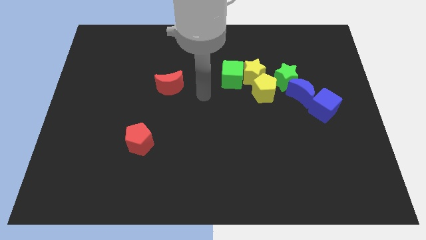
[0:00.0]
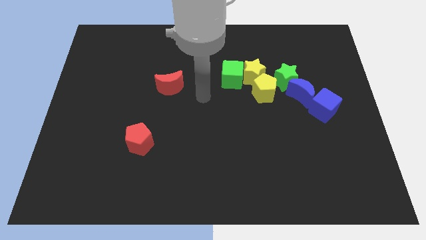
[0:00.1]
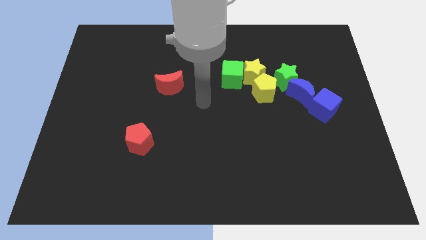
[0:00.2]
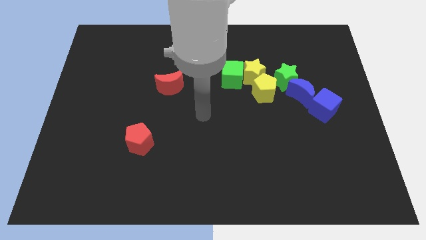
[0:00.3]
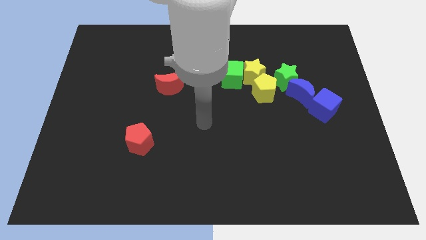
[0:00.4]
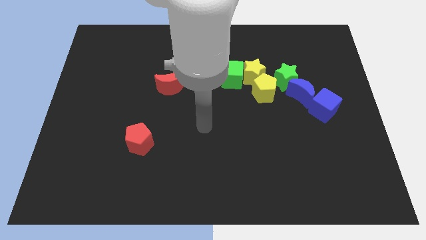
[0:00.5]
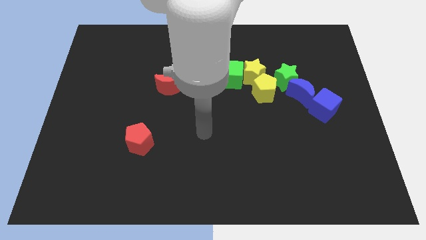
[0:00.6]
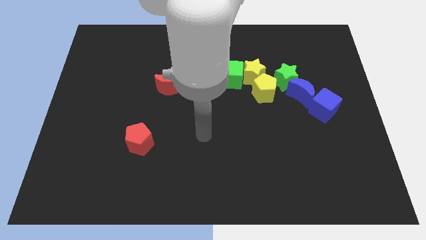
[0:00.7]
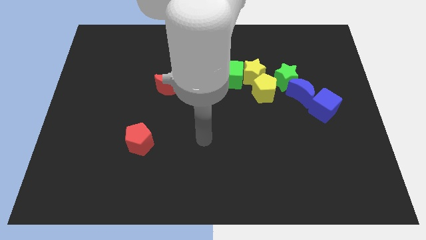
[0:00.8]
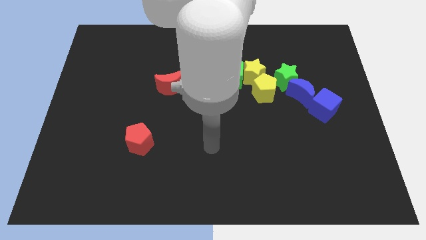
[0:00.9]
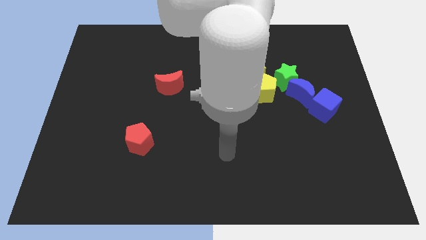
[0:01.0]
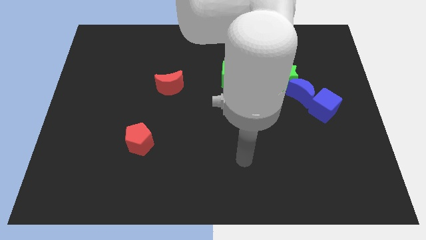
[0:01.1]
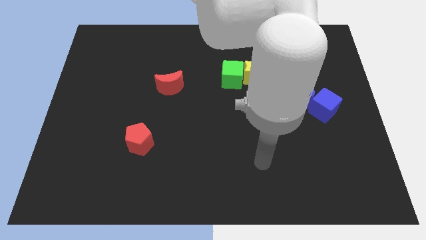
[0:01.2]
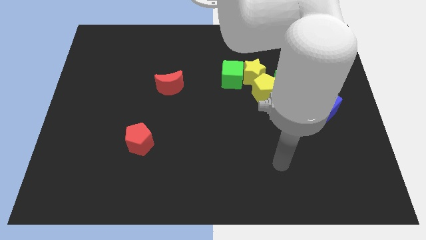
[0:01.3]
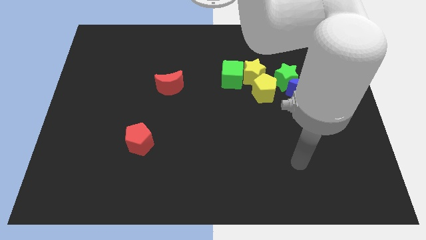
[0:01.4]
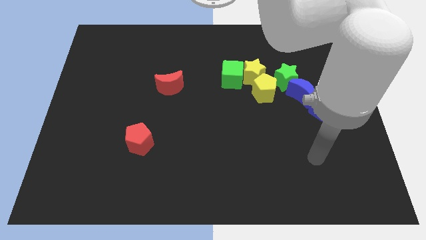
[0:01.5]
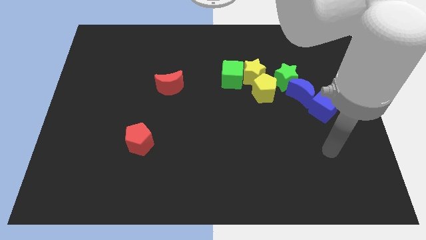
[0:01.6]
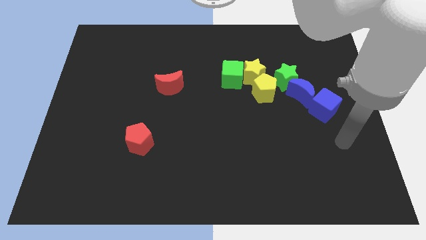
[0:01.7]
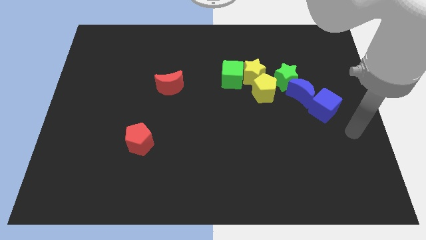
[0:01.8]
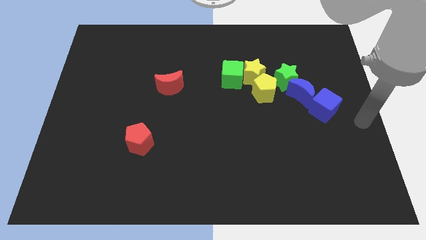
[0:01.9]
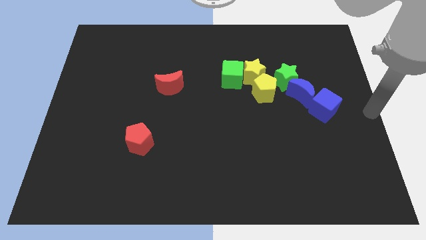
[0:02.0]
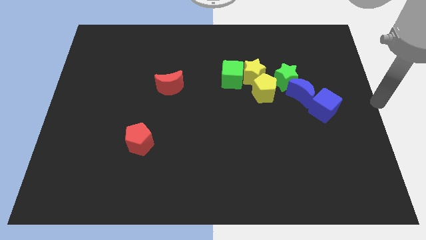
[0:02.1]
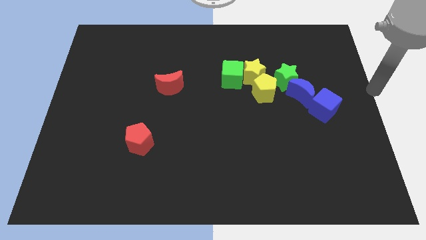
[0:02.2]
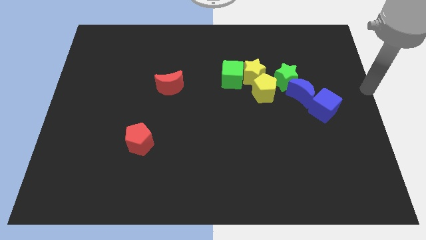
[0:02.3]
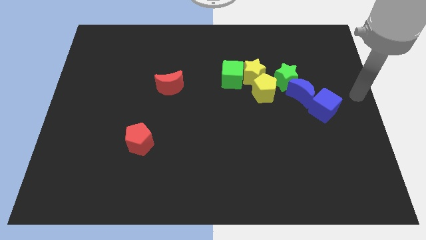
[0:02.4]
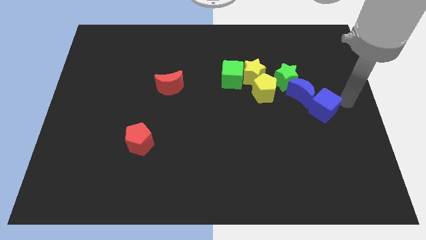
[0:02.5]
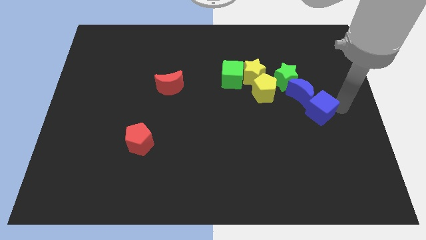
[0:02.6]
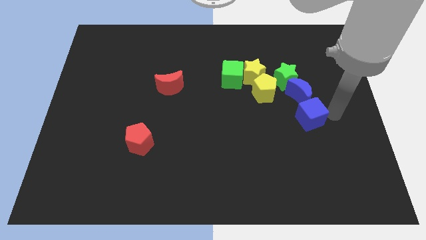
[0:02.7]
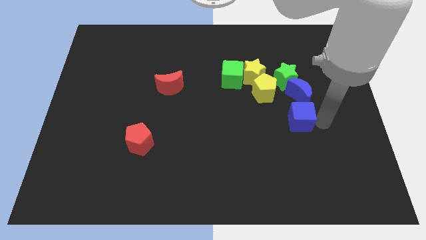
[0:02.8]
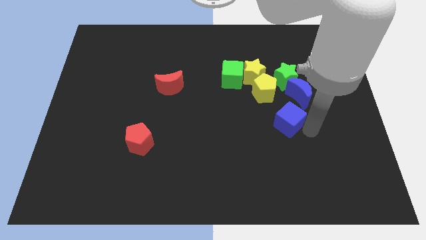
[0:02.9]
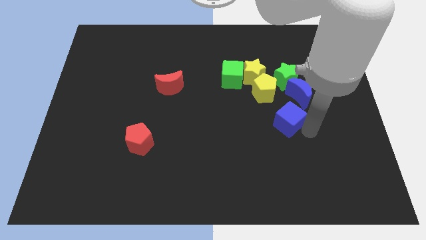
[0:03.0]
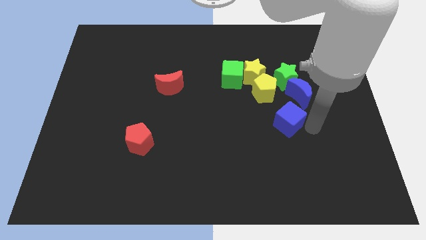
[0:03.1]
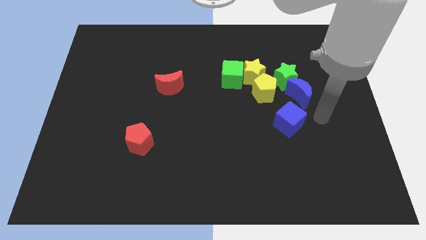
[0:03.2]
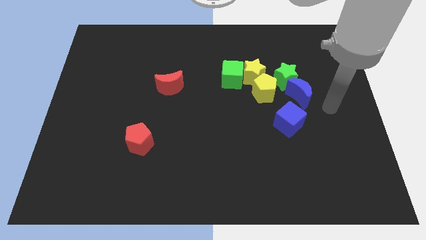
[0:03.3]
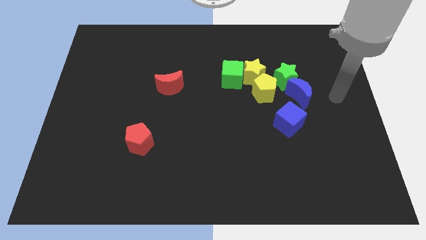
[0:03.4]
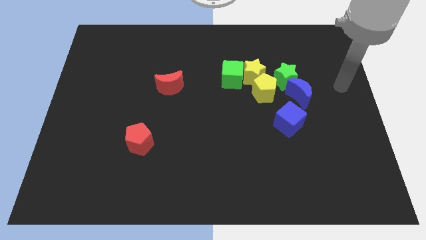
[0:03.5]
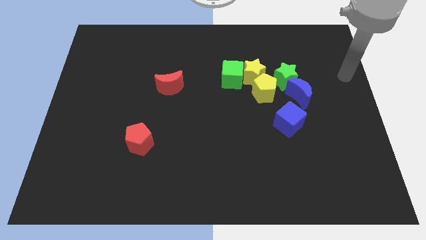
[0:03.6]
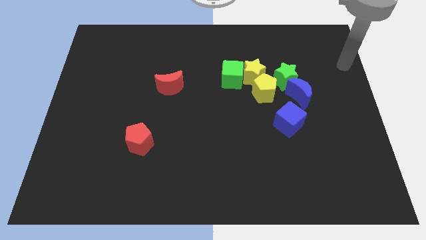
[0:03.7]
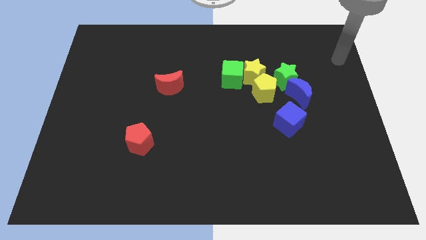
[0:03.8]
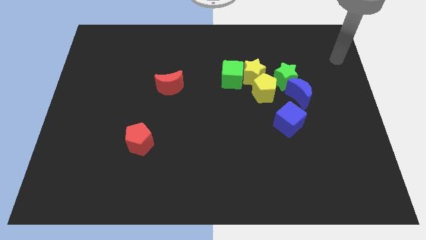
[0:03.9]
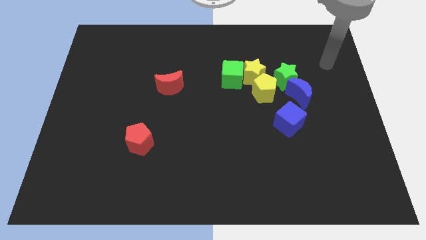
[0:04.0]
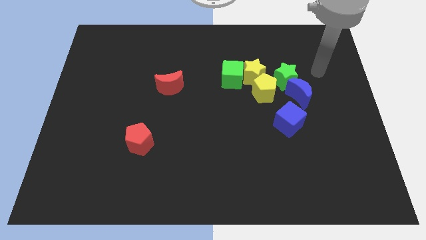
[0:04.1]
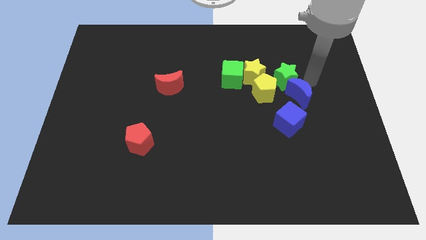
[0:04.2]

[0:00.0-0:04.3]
separate the blue cube from the blue crescent

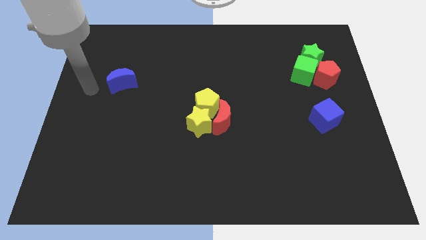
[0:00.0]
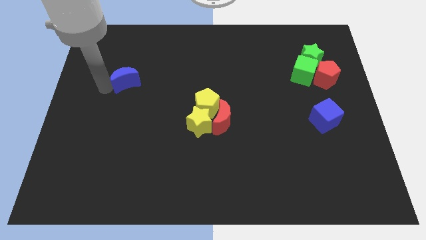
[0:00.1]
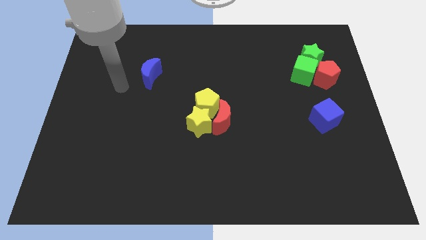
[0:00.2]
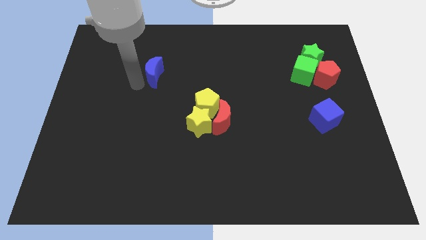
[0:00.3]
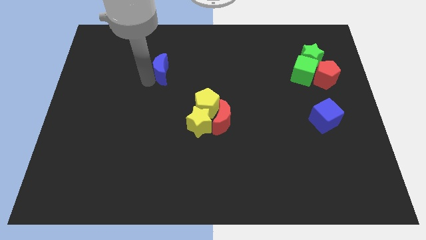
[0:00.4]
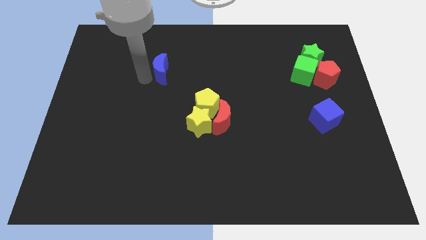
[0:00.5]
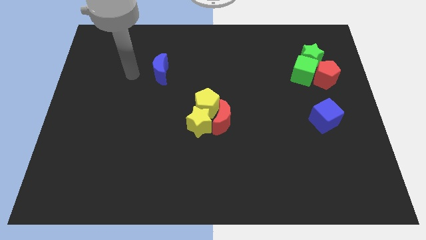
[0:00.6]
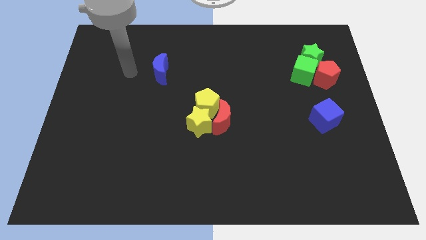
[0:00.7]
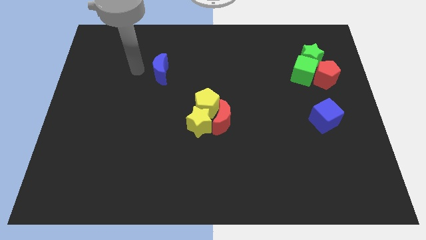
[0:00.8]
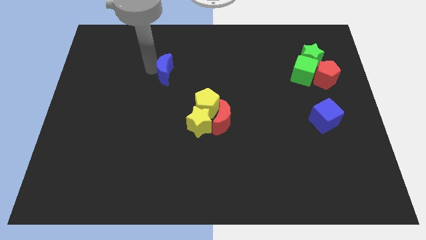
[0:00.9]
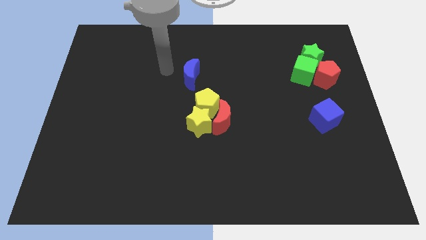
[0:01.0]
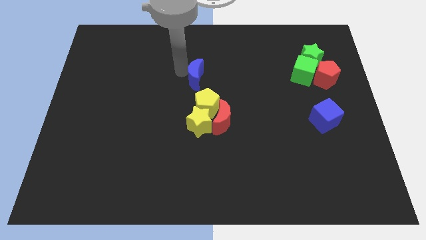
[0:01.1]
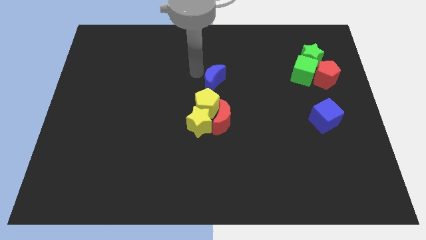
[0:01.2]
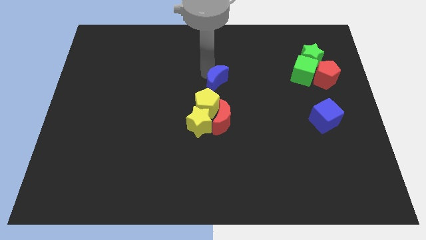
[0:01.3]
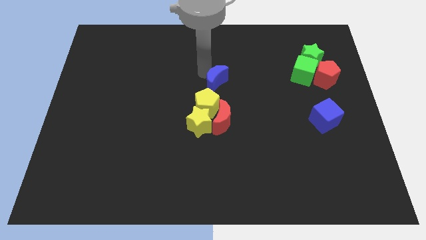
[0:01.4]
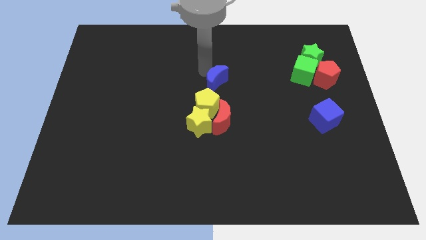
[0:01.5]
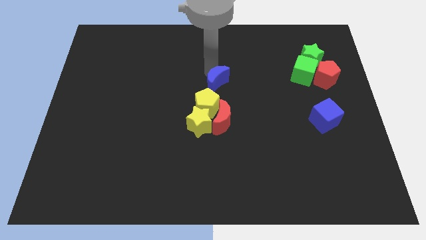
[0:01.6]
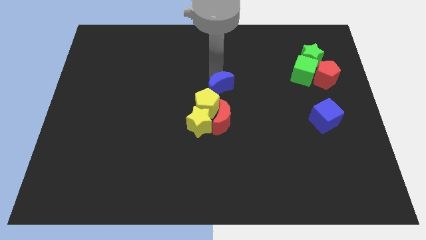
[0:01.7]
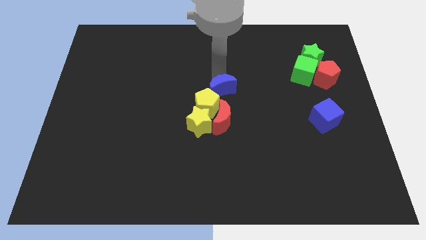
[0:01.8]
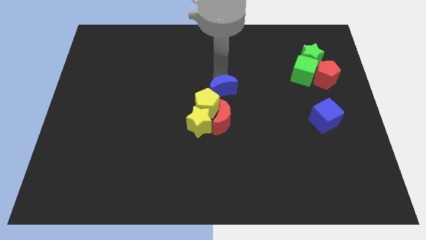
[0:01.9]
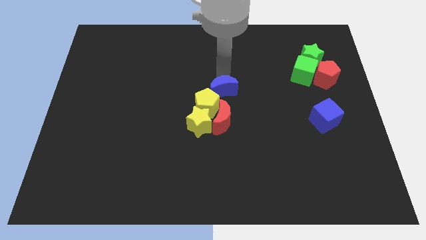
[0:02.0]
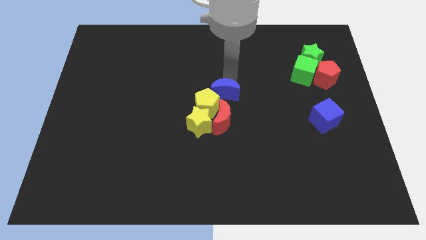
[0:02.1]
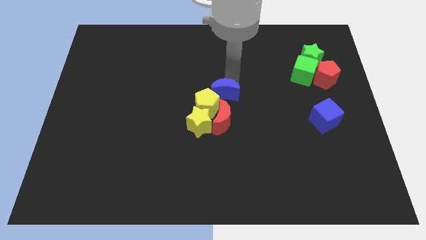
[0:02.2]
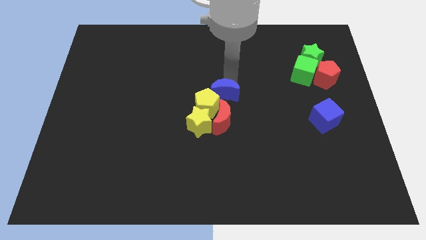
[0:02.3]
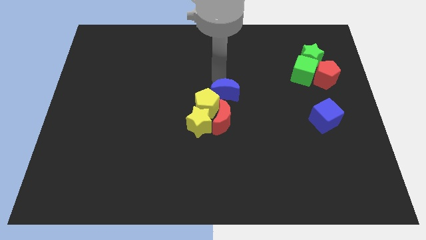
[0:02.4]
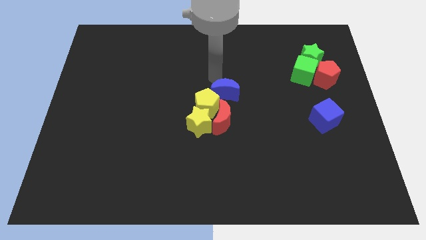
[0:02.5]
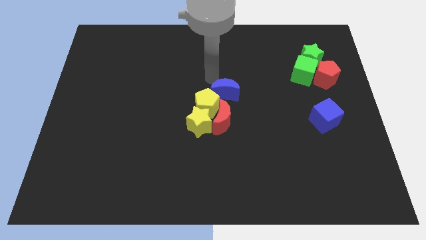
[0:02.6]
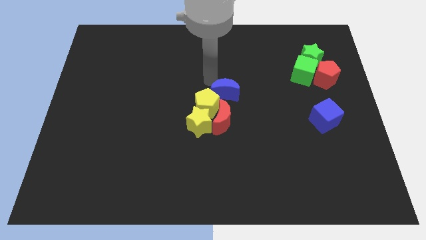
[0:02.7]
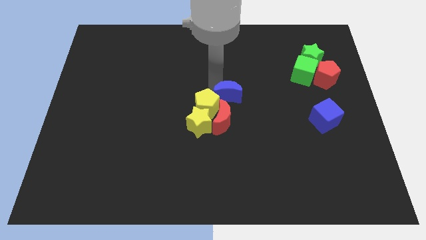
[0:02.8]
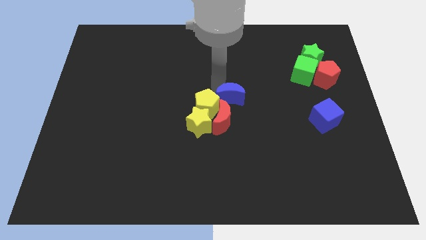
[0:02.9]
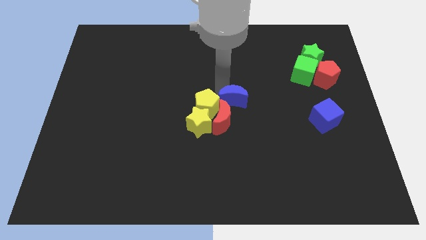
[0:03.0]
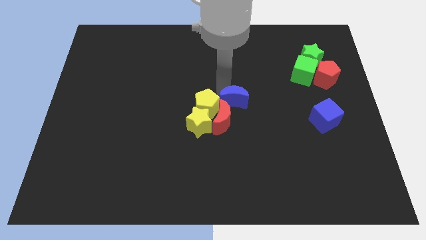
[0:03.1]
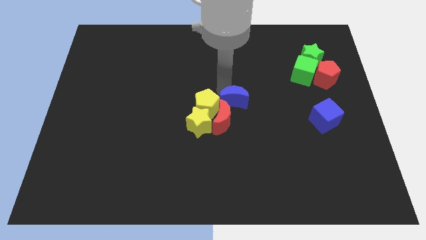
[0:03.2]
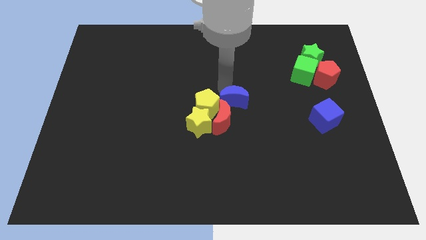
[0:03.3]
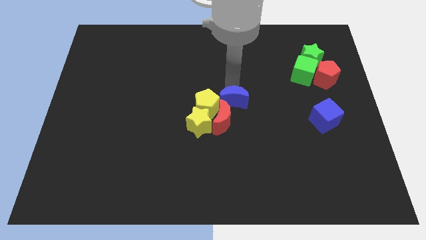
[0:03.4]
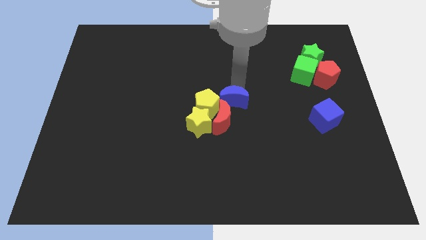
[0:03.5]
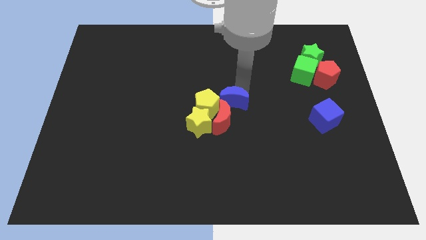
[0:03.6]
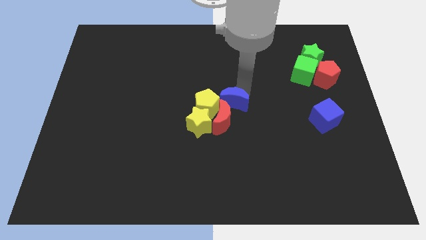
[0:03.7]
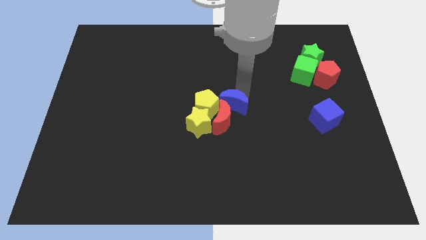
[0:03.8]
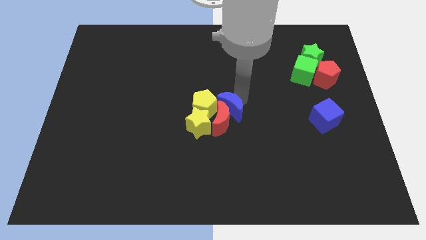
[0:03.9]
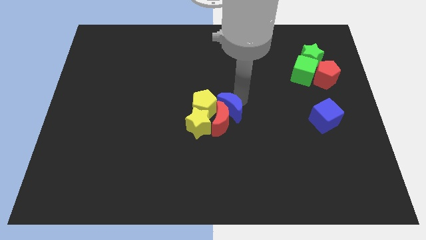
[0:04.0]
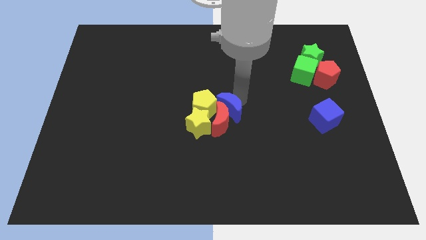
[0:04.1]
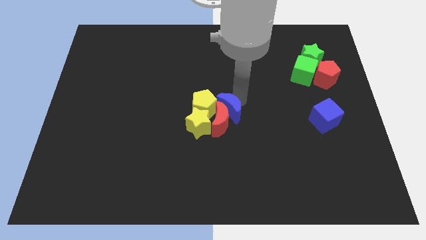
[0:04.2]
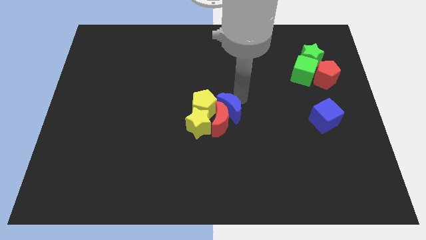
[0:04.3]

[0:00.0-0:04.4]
move the blue moon into the group of blocks at the center of the board

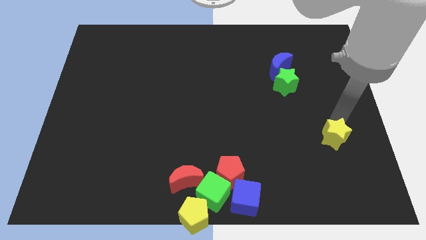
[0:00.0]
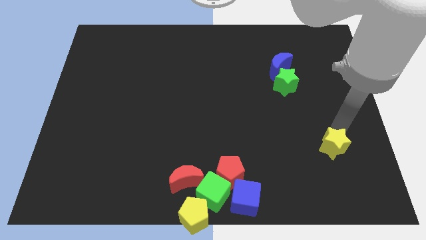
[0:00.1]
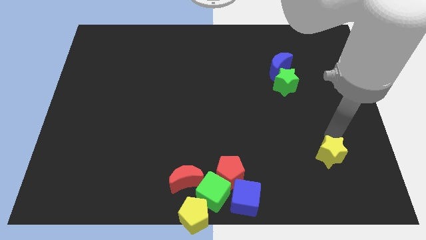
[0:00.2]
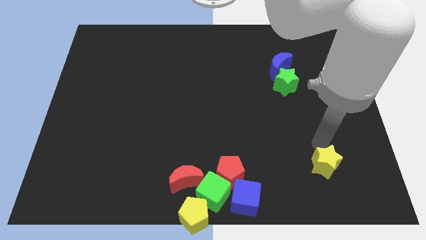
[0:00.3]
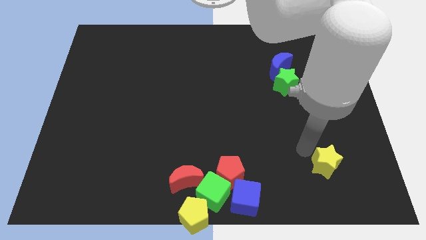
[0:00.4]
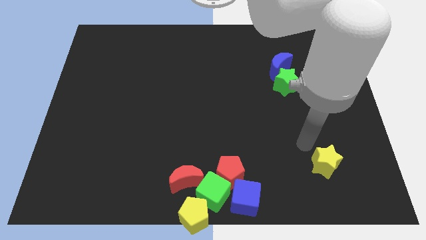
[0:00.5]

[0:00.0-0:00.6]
move the yellow star slightly down
